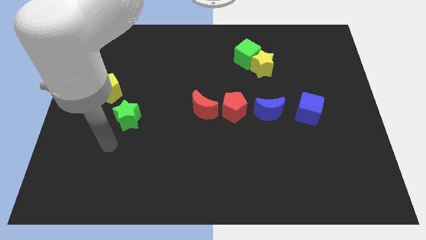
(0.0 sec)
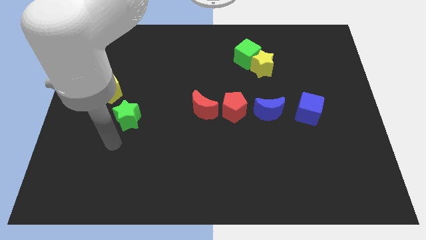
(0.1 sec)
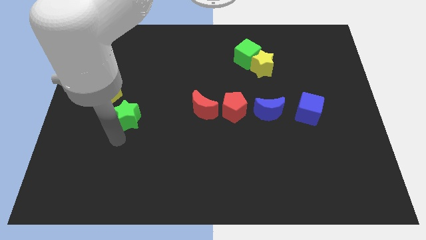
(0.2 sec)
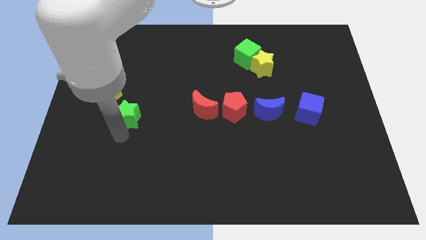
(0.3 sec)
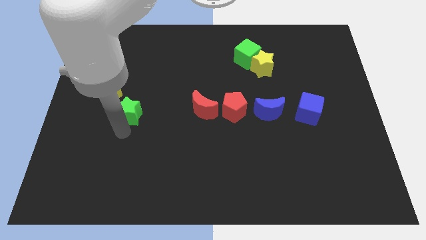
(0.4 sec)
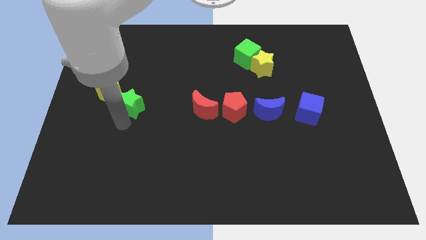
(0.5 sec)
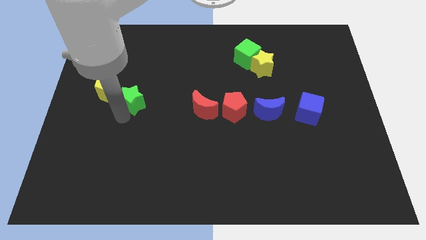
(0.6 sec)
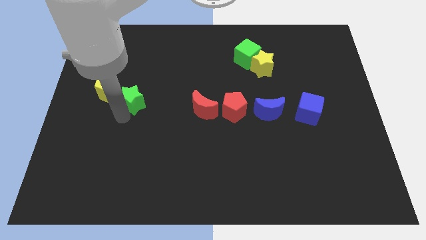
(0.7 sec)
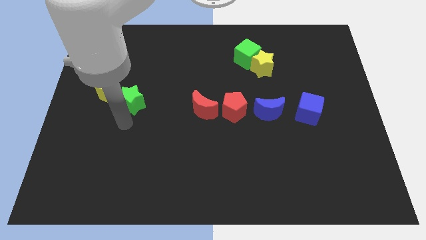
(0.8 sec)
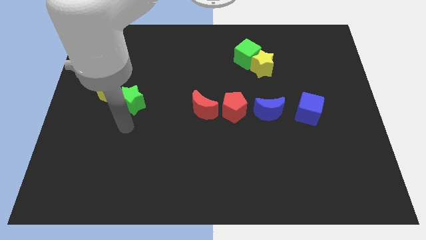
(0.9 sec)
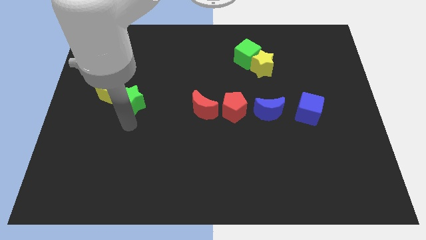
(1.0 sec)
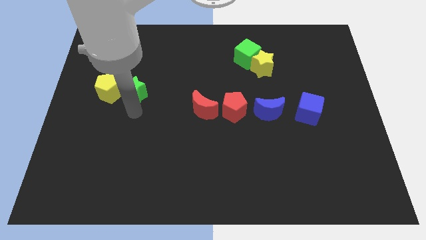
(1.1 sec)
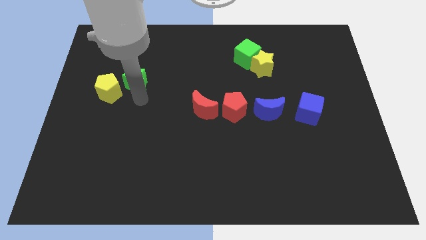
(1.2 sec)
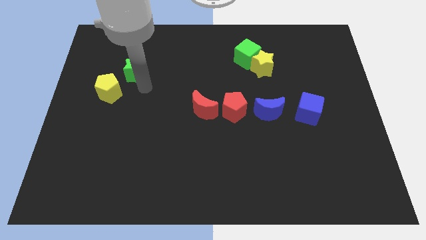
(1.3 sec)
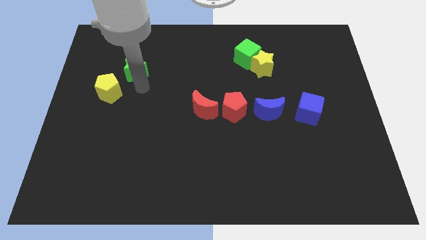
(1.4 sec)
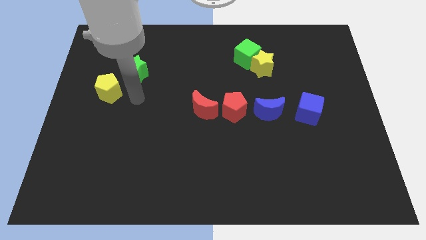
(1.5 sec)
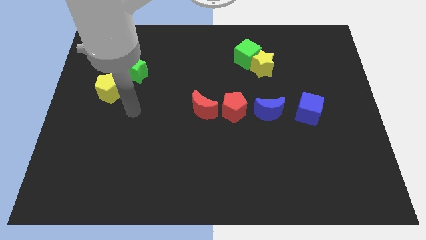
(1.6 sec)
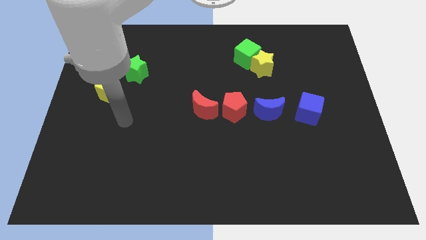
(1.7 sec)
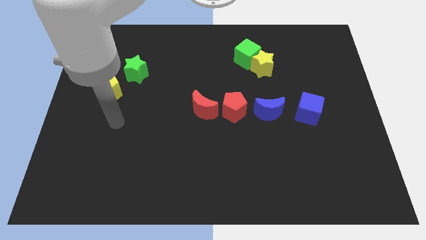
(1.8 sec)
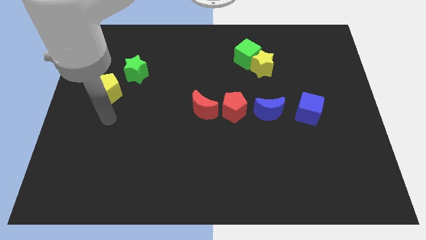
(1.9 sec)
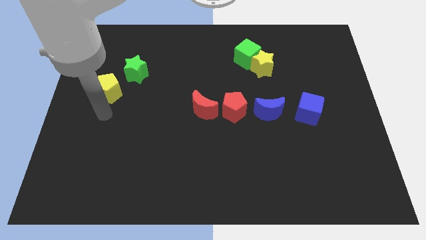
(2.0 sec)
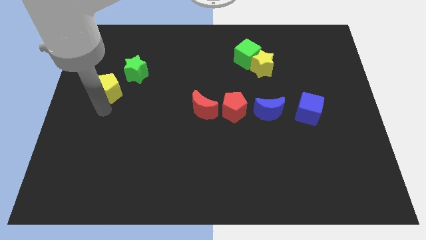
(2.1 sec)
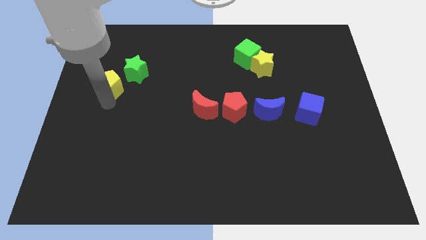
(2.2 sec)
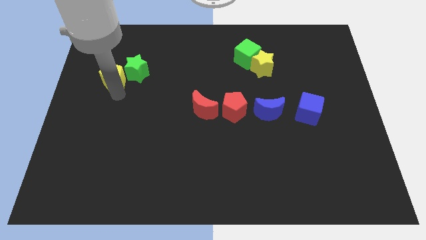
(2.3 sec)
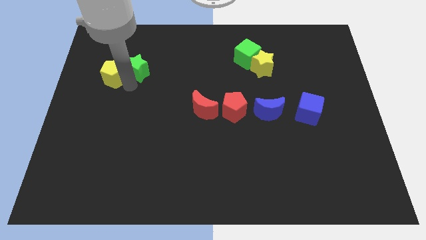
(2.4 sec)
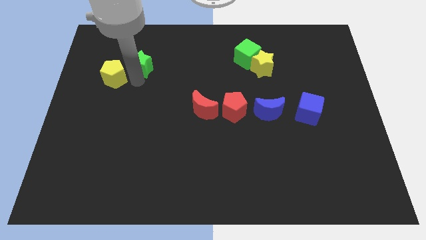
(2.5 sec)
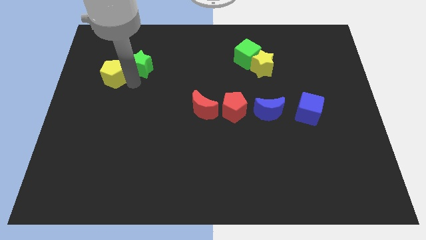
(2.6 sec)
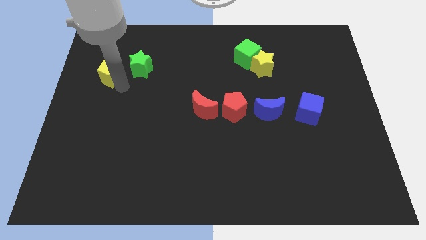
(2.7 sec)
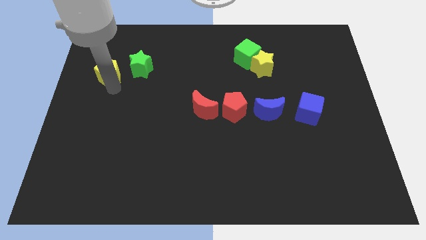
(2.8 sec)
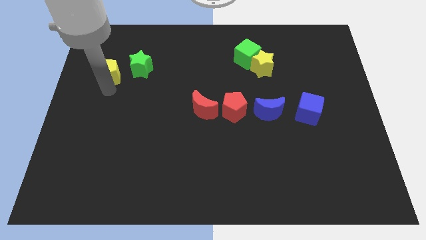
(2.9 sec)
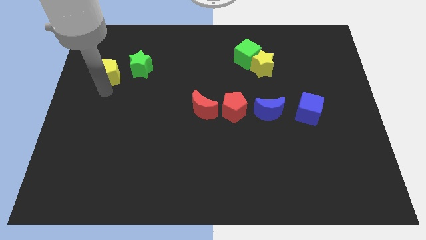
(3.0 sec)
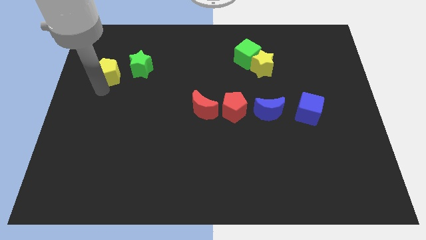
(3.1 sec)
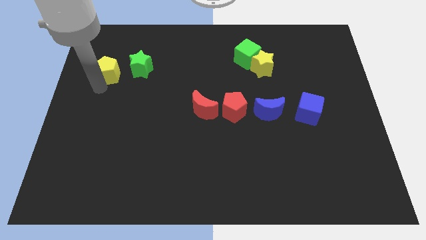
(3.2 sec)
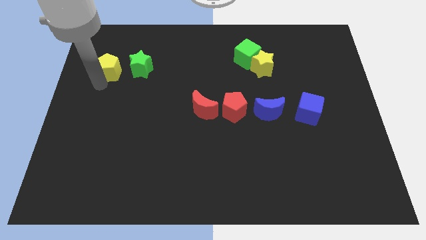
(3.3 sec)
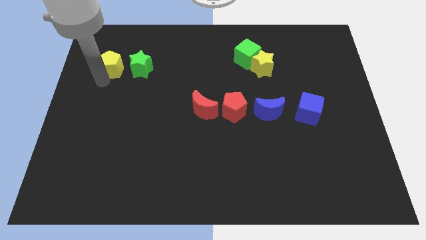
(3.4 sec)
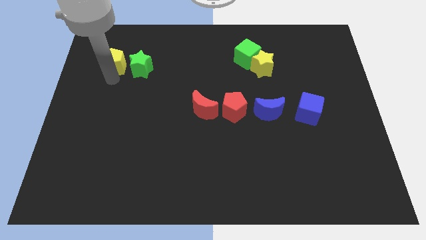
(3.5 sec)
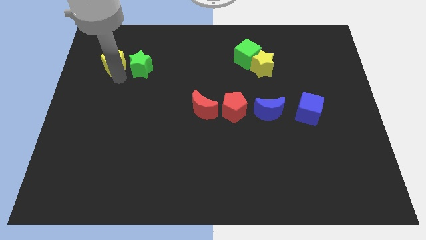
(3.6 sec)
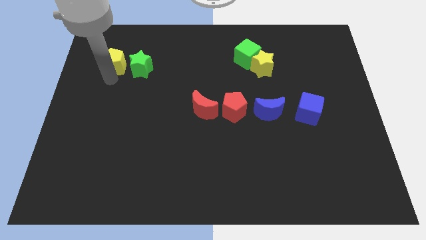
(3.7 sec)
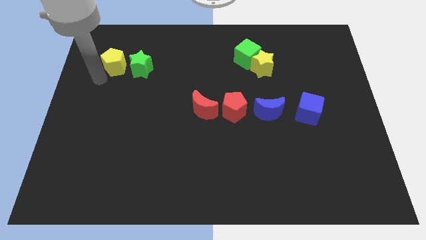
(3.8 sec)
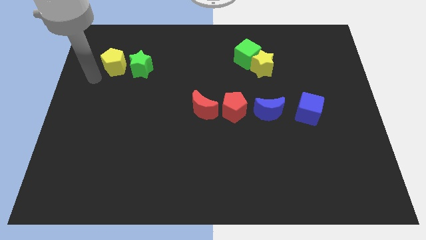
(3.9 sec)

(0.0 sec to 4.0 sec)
push the green star and yellow pentagon towards top left

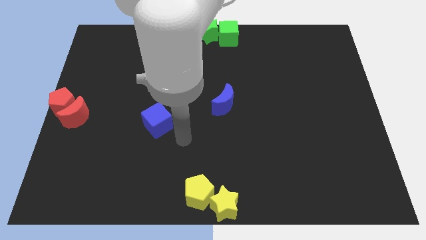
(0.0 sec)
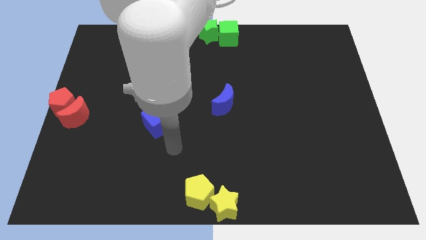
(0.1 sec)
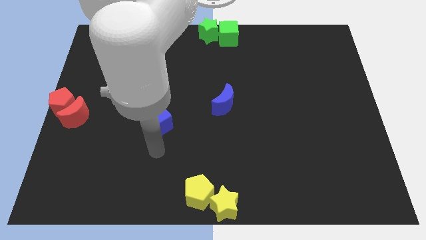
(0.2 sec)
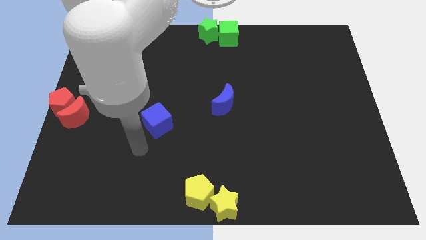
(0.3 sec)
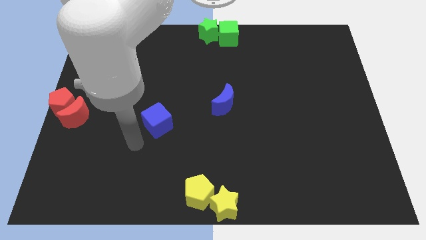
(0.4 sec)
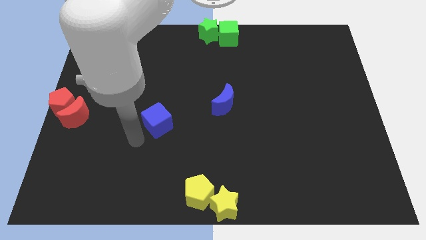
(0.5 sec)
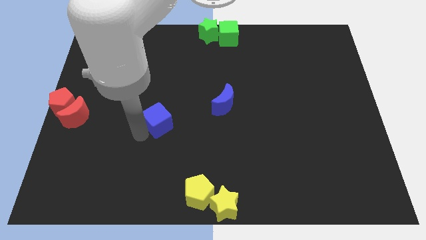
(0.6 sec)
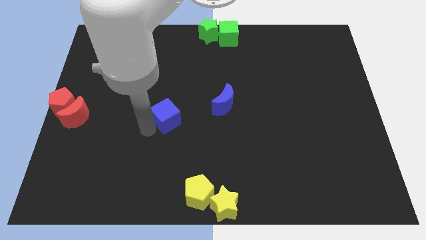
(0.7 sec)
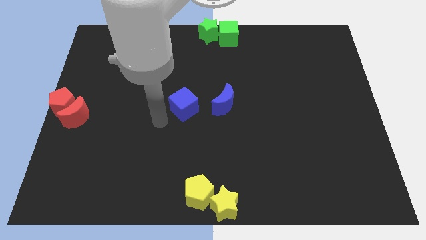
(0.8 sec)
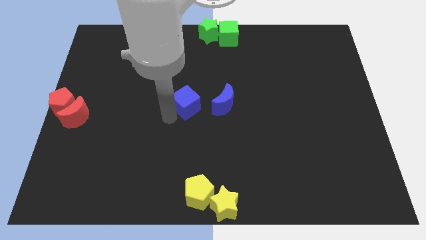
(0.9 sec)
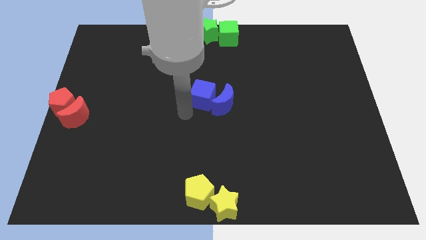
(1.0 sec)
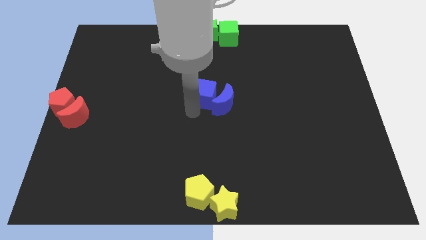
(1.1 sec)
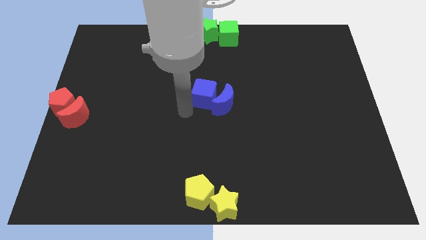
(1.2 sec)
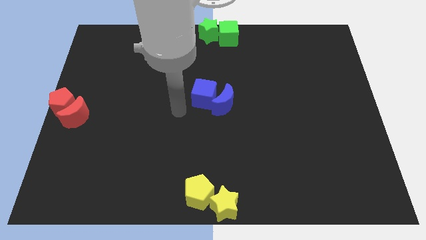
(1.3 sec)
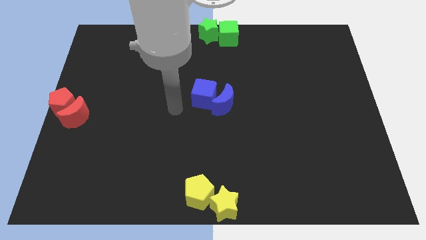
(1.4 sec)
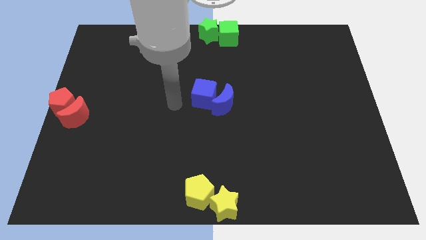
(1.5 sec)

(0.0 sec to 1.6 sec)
push the blue cube into the blue moon

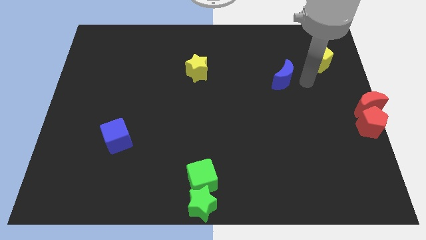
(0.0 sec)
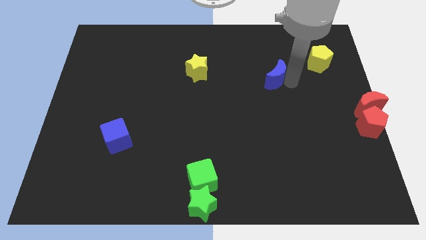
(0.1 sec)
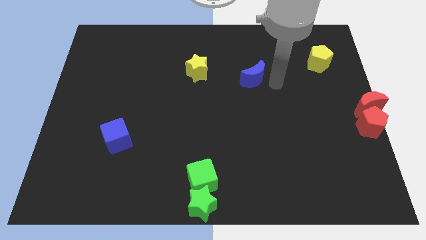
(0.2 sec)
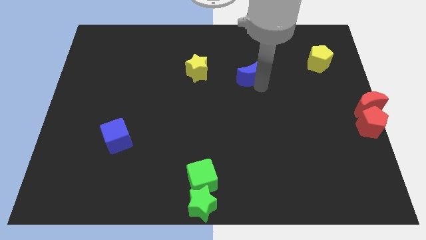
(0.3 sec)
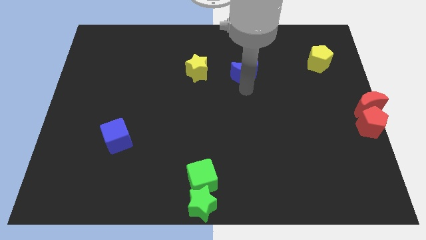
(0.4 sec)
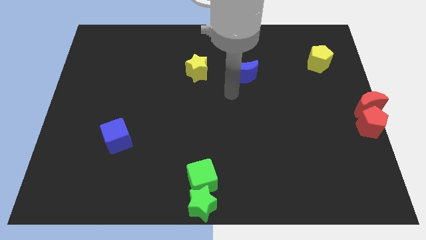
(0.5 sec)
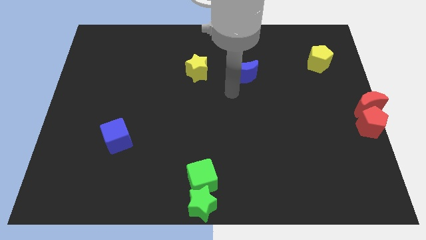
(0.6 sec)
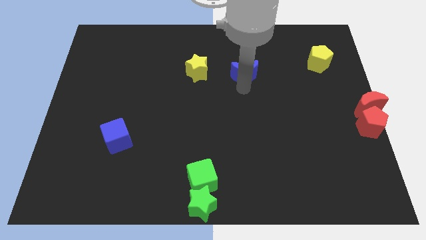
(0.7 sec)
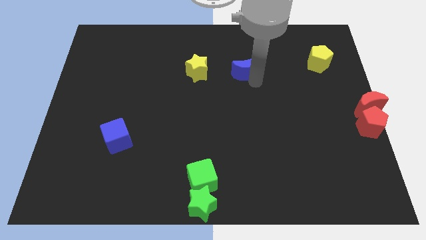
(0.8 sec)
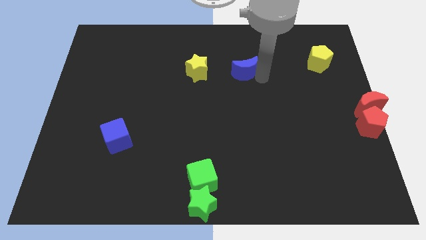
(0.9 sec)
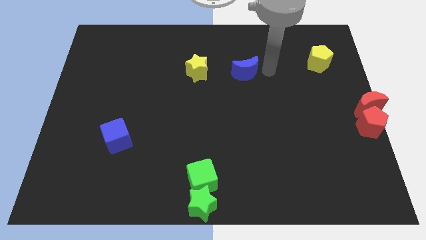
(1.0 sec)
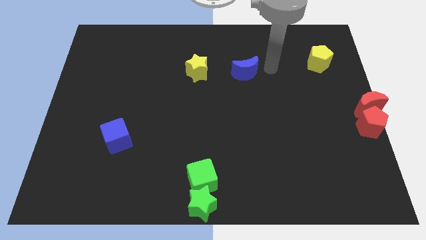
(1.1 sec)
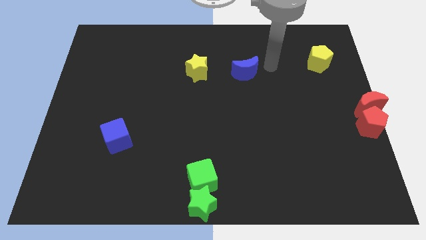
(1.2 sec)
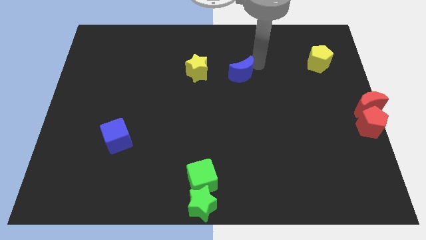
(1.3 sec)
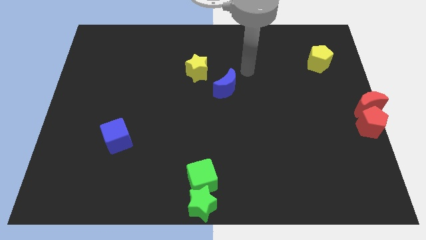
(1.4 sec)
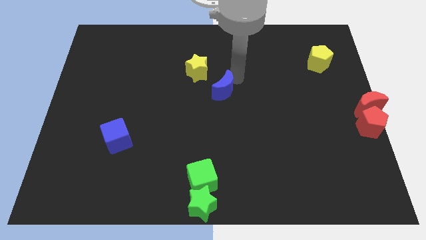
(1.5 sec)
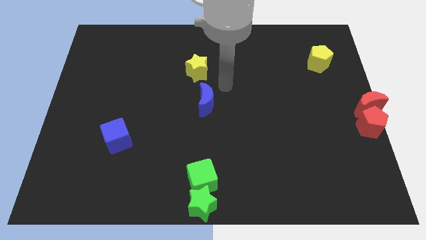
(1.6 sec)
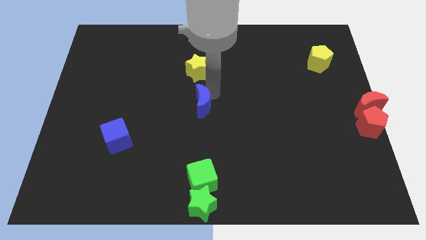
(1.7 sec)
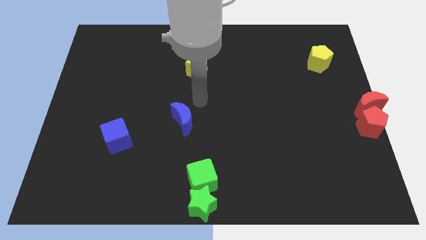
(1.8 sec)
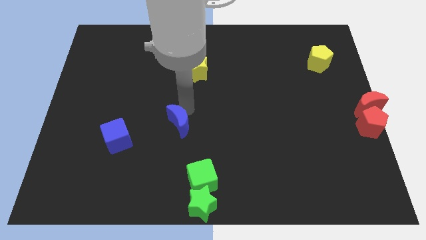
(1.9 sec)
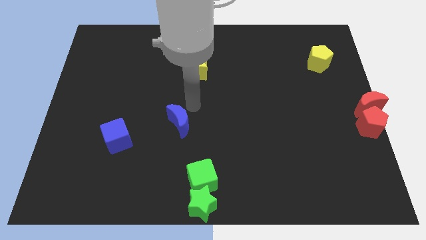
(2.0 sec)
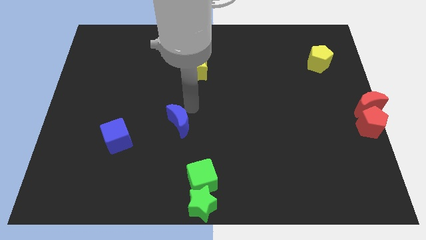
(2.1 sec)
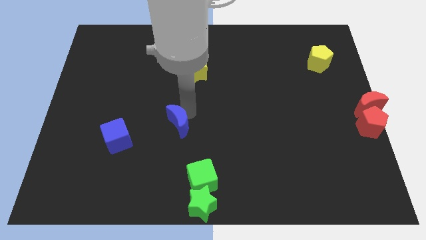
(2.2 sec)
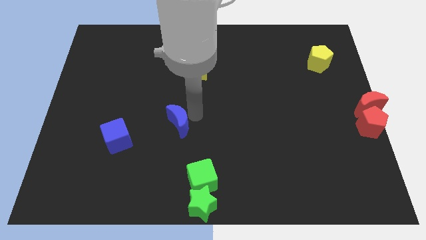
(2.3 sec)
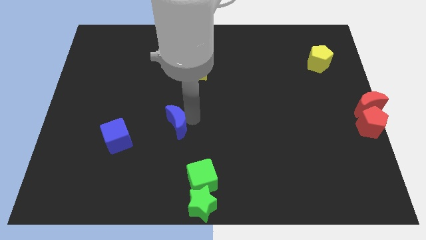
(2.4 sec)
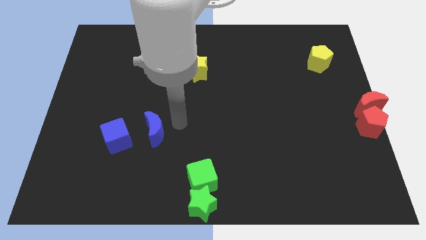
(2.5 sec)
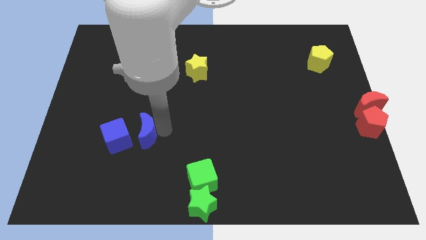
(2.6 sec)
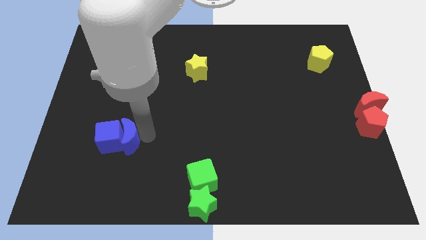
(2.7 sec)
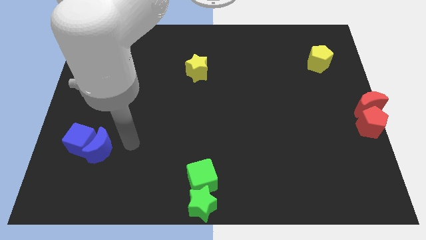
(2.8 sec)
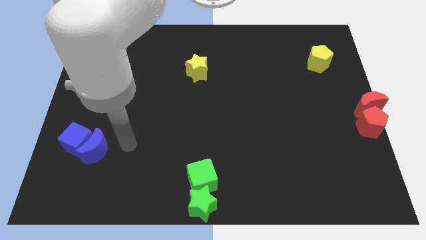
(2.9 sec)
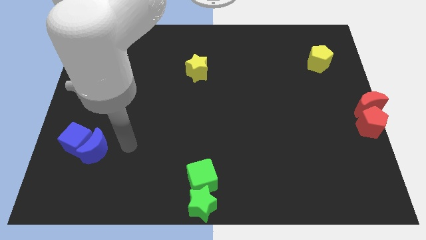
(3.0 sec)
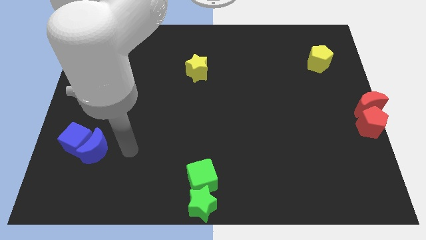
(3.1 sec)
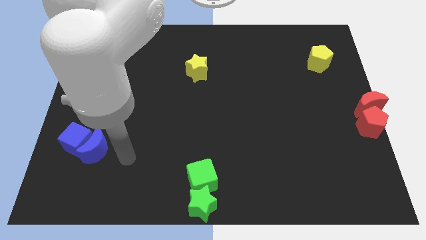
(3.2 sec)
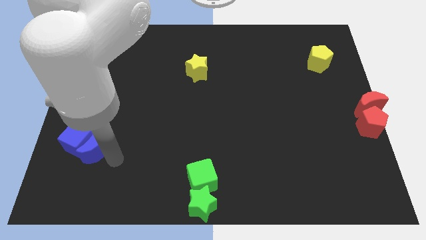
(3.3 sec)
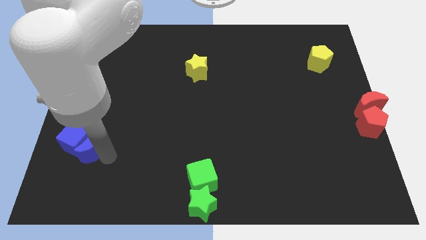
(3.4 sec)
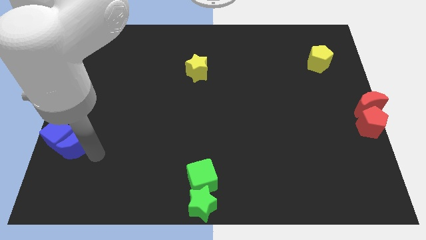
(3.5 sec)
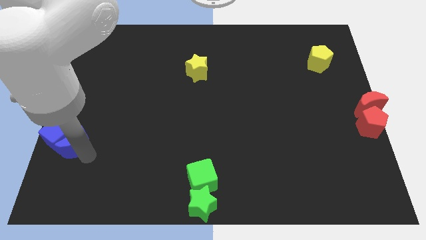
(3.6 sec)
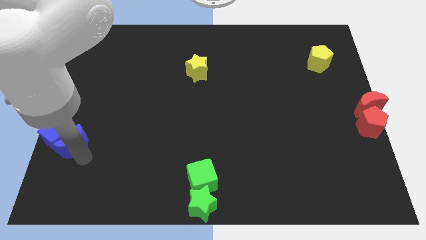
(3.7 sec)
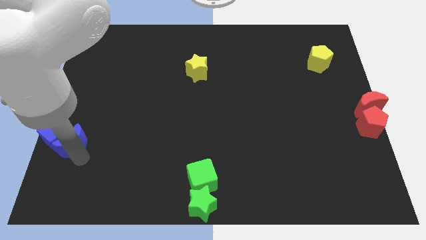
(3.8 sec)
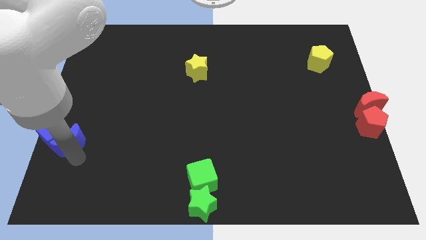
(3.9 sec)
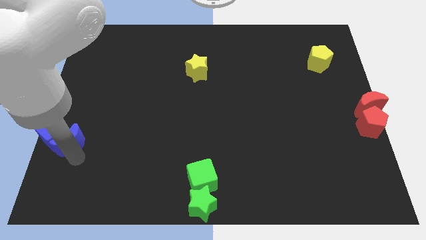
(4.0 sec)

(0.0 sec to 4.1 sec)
push the blue blocks towards the left side of the board
